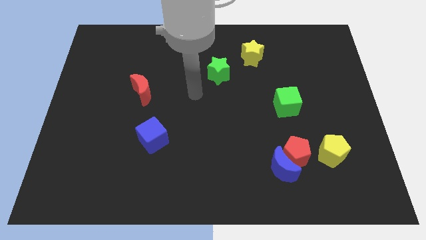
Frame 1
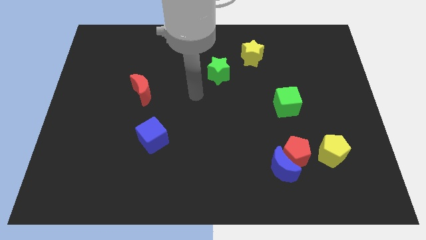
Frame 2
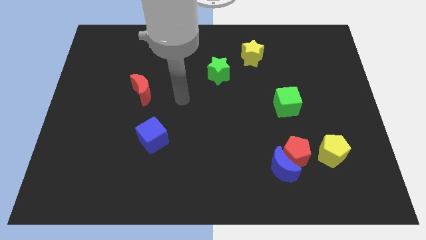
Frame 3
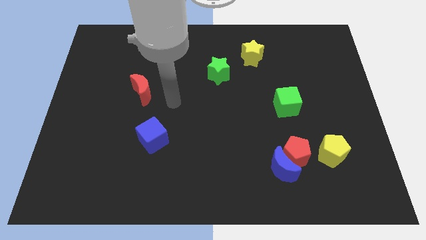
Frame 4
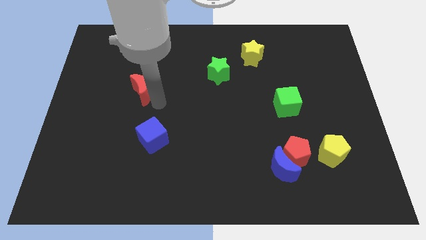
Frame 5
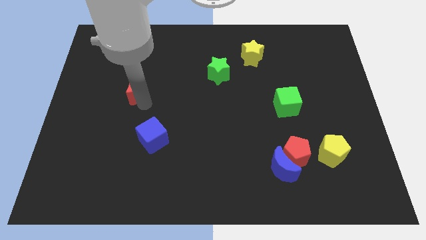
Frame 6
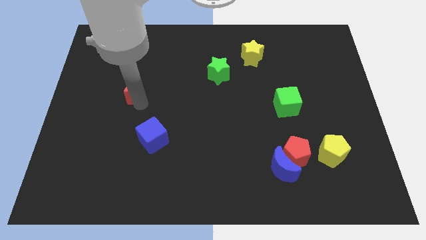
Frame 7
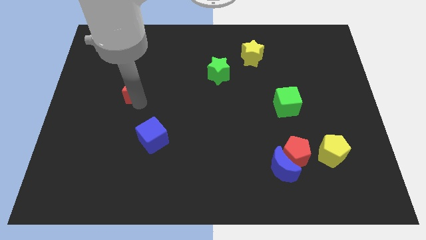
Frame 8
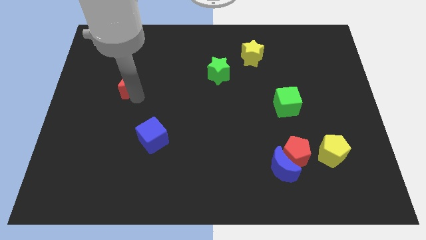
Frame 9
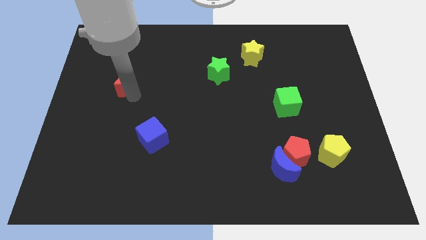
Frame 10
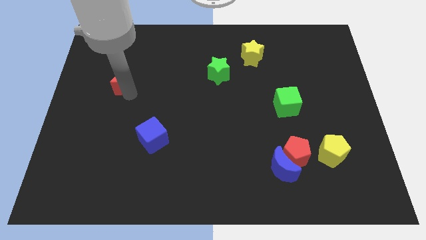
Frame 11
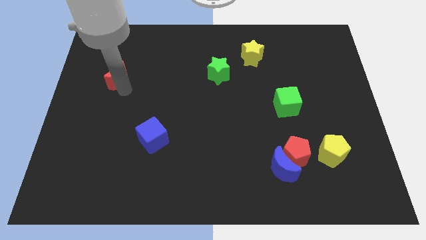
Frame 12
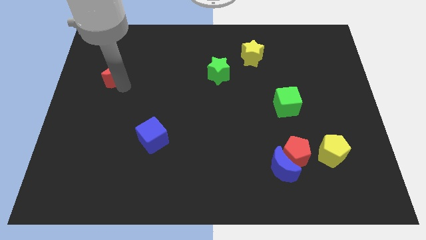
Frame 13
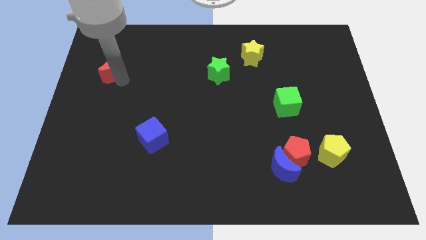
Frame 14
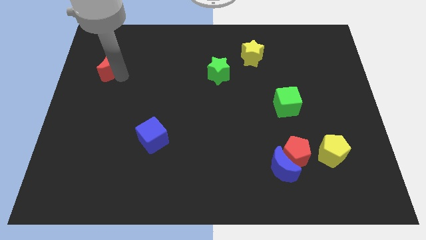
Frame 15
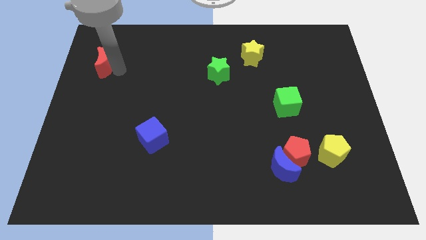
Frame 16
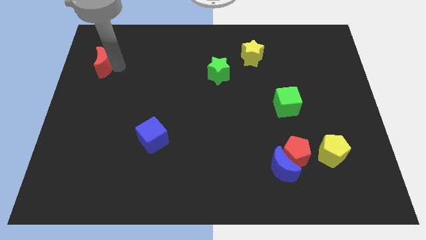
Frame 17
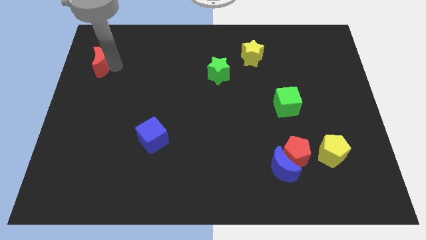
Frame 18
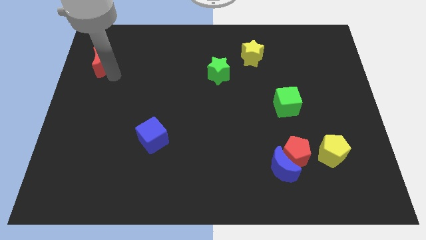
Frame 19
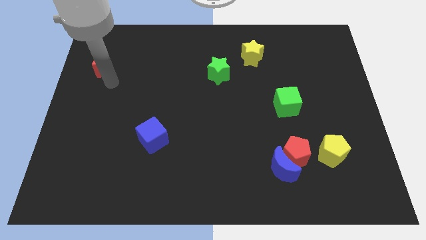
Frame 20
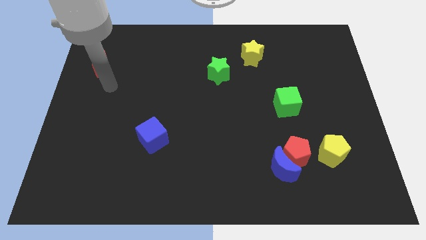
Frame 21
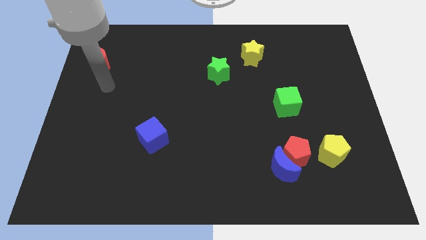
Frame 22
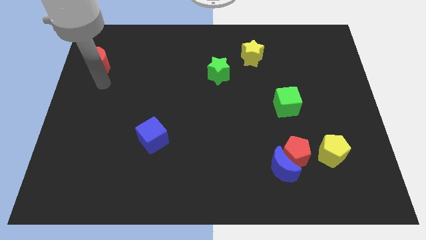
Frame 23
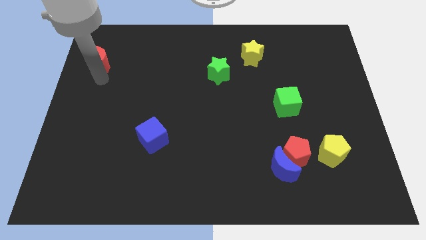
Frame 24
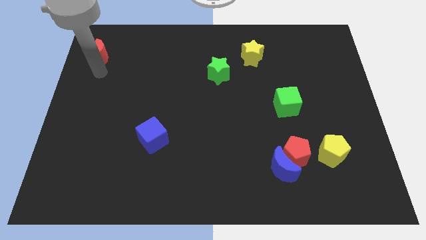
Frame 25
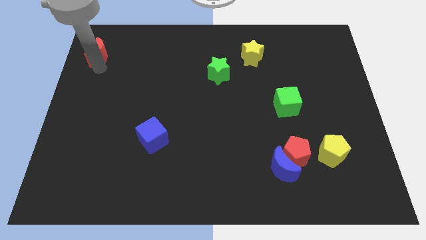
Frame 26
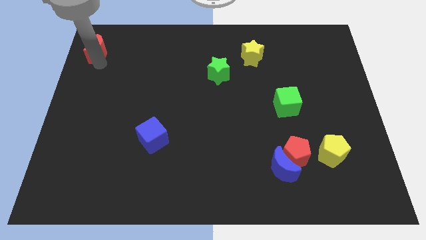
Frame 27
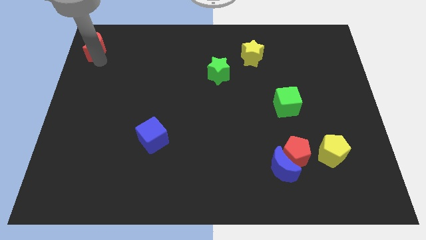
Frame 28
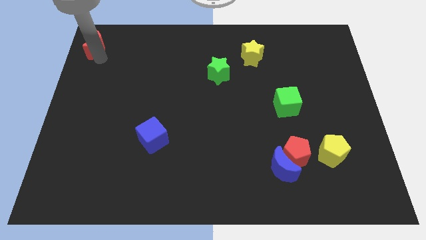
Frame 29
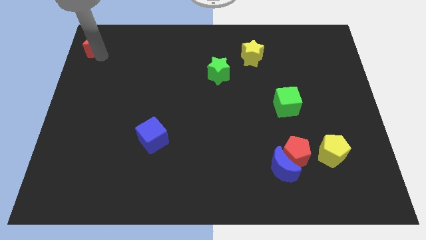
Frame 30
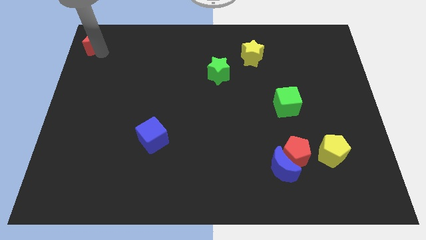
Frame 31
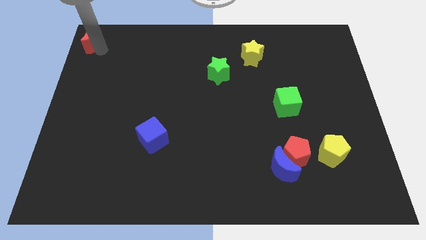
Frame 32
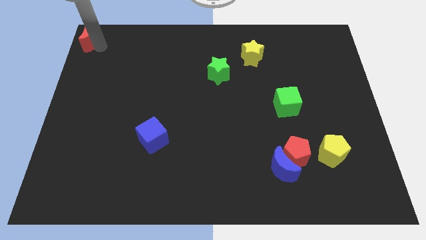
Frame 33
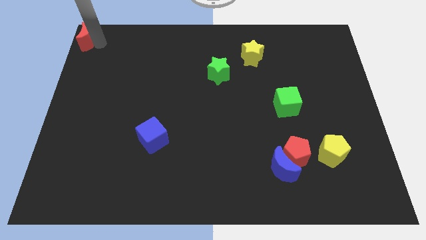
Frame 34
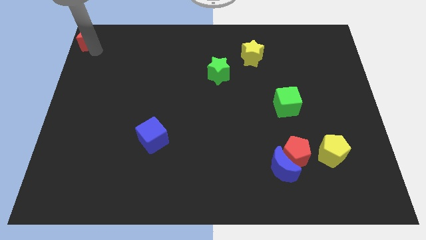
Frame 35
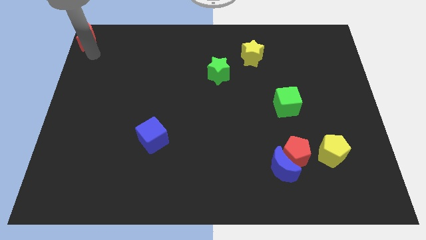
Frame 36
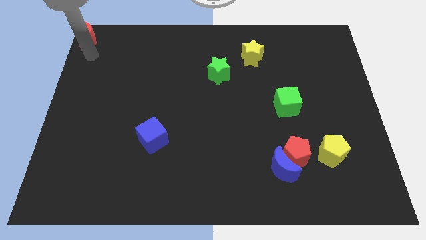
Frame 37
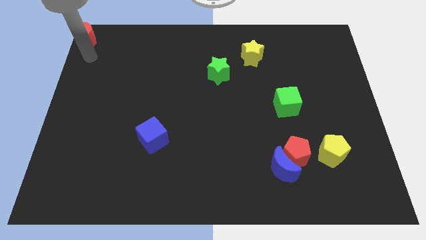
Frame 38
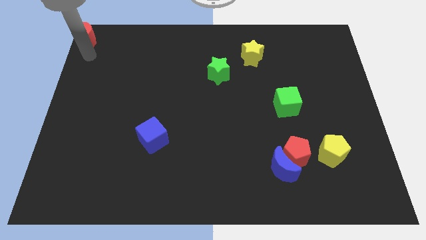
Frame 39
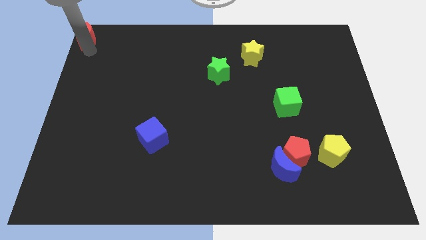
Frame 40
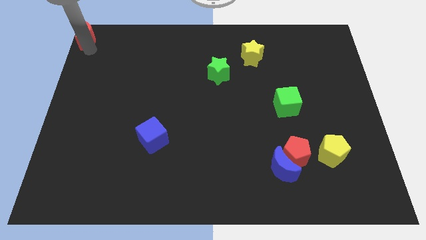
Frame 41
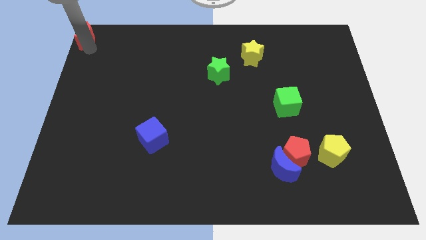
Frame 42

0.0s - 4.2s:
move the red crescent to the top left corner of the board

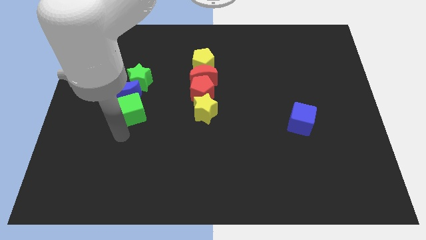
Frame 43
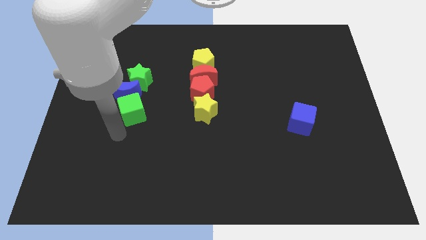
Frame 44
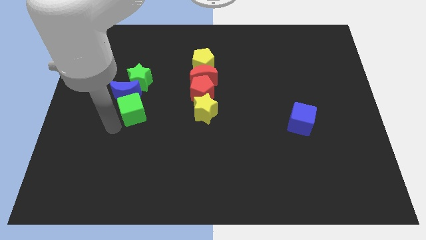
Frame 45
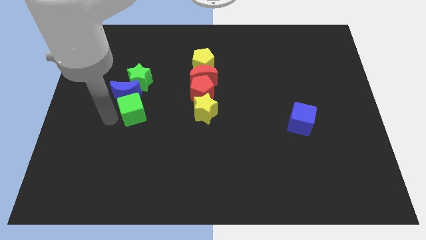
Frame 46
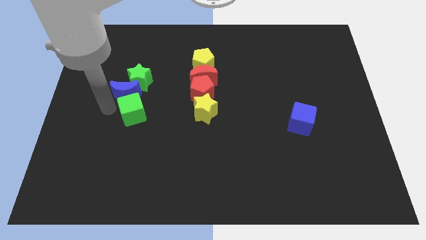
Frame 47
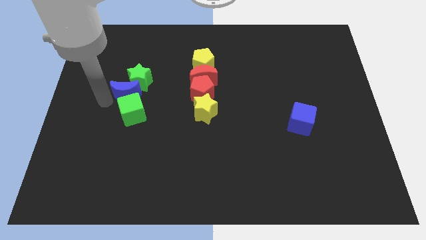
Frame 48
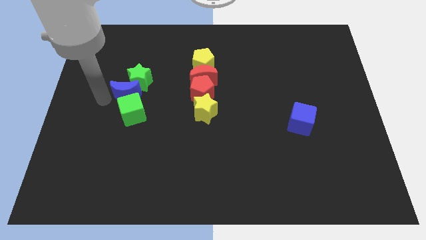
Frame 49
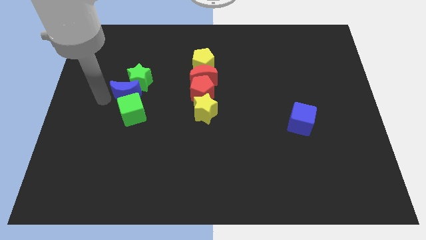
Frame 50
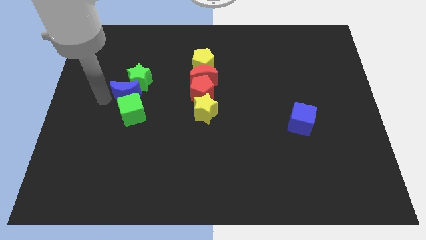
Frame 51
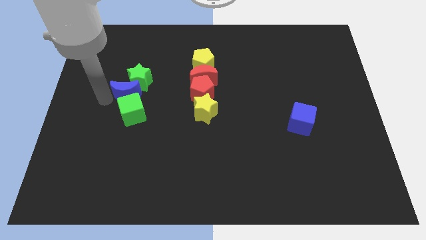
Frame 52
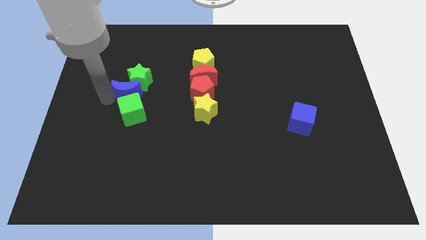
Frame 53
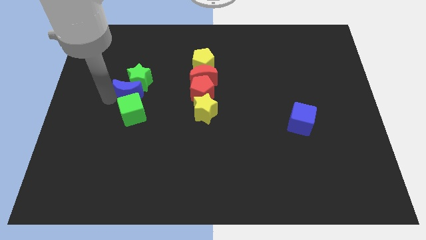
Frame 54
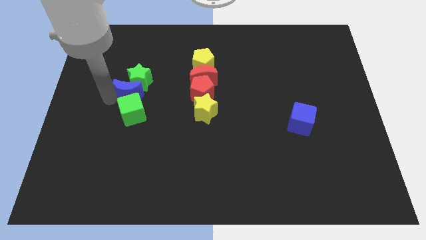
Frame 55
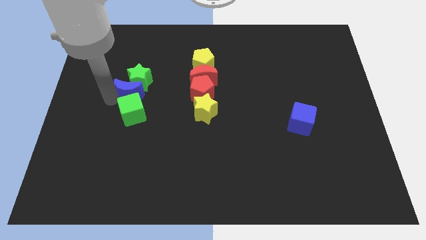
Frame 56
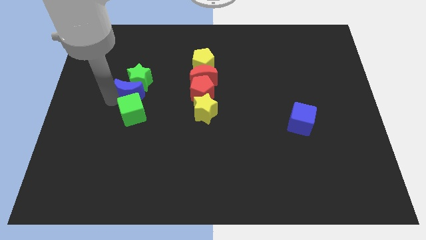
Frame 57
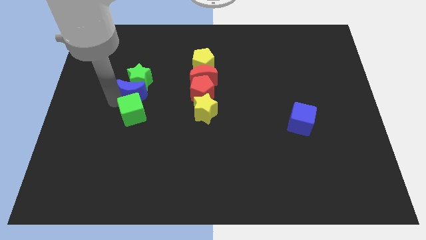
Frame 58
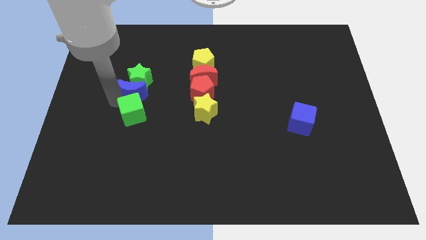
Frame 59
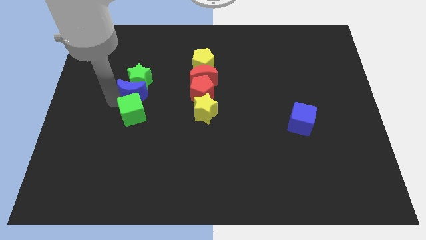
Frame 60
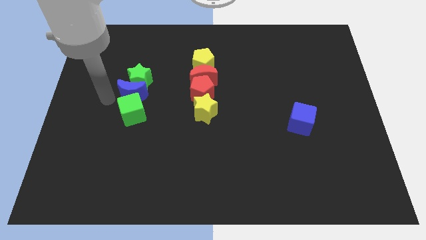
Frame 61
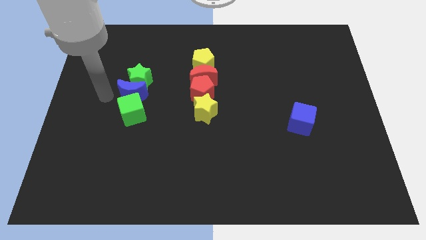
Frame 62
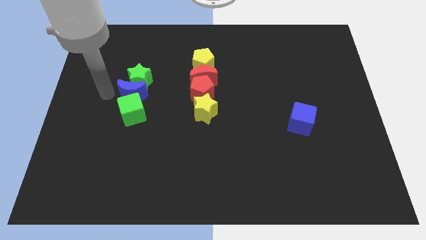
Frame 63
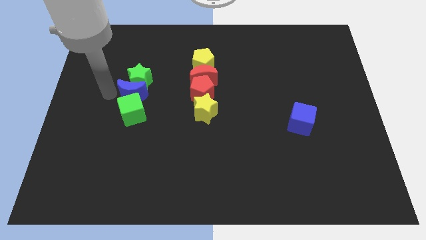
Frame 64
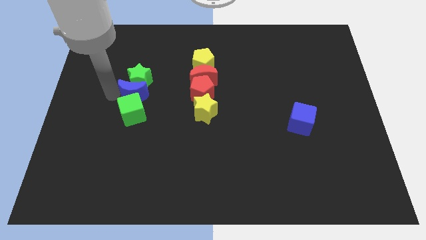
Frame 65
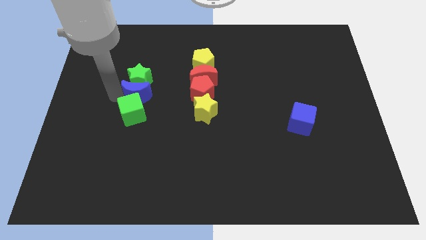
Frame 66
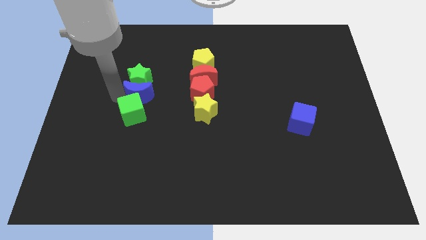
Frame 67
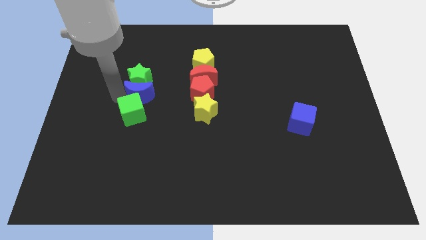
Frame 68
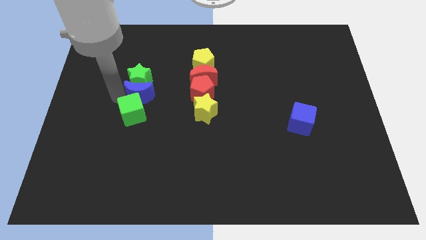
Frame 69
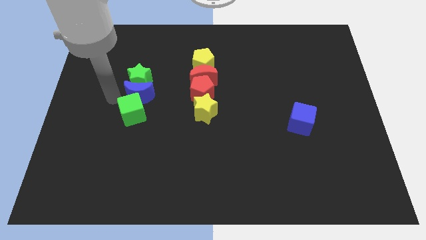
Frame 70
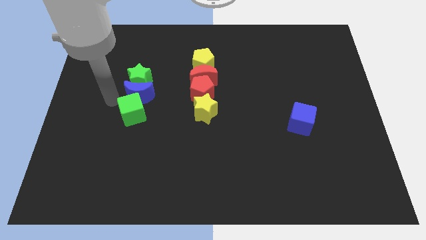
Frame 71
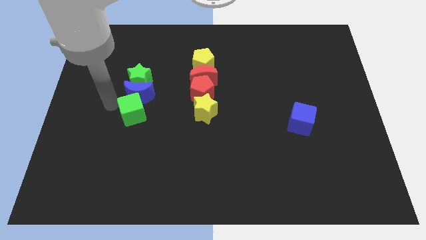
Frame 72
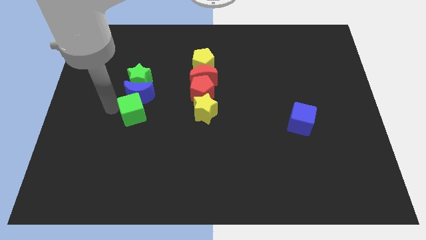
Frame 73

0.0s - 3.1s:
place blue moon in between green blocks

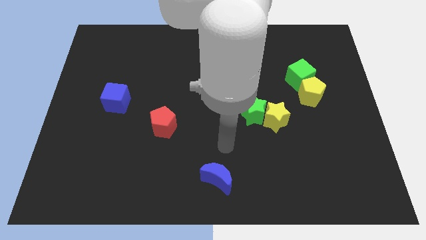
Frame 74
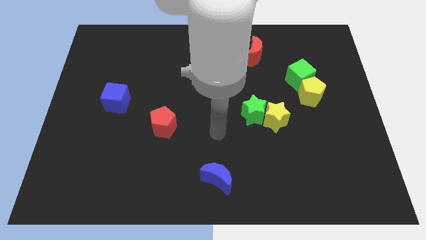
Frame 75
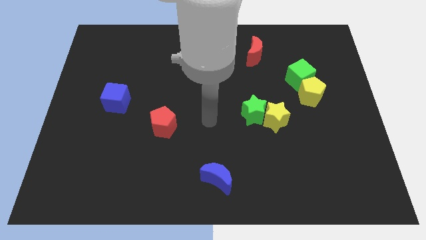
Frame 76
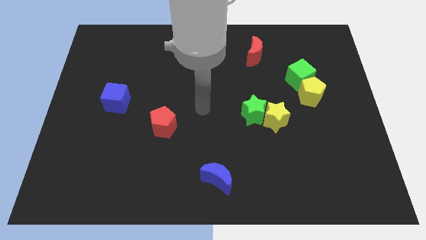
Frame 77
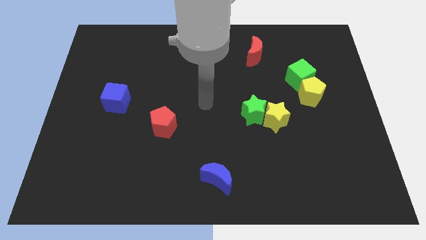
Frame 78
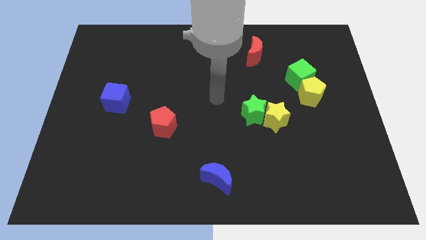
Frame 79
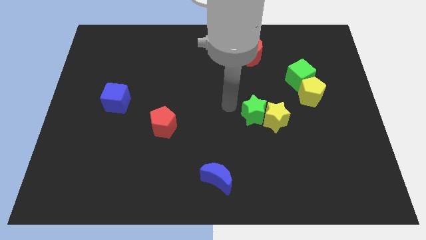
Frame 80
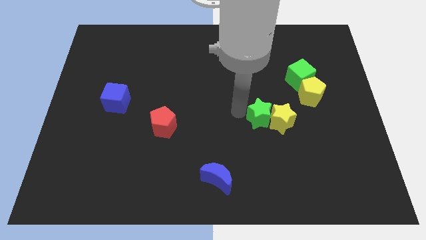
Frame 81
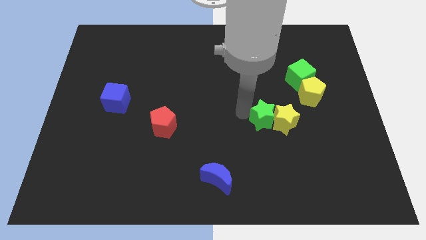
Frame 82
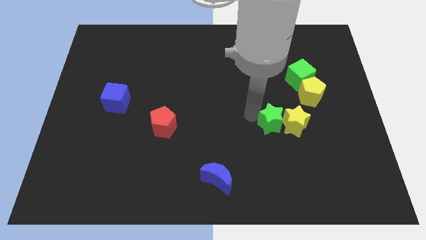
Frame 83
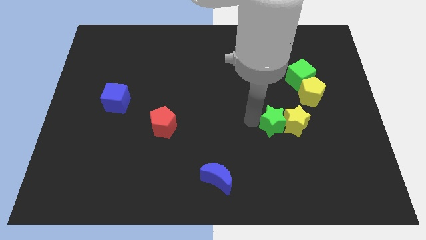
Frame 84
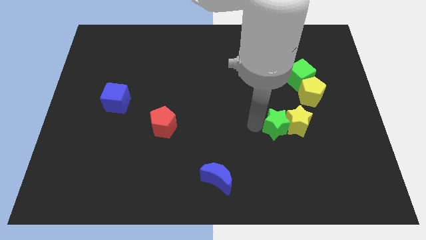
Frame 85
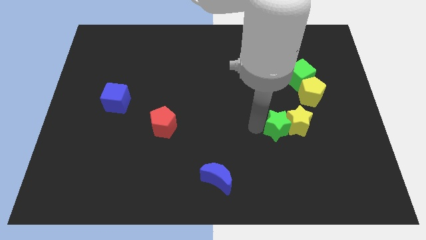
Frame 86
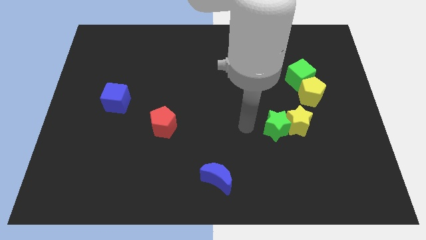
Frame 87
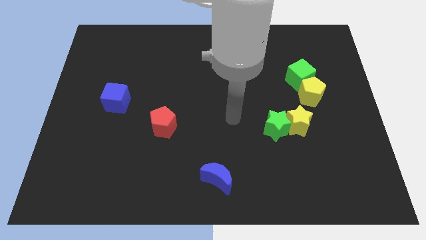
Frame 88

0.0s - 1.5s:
push the green and yellow stars together slightly to the right

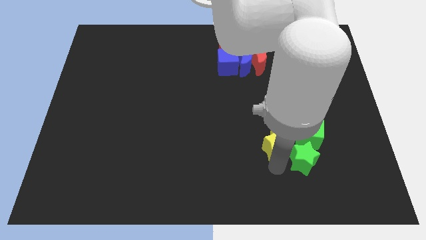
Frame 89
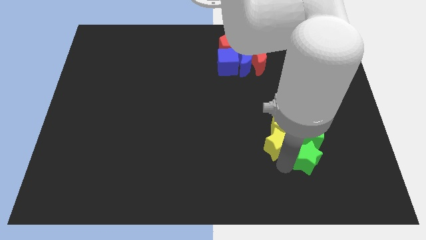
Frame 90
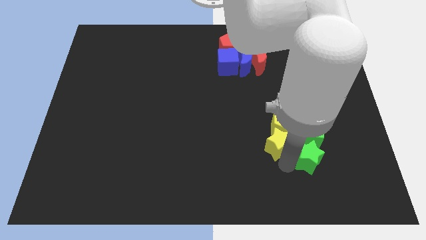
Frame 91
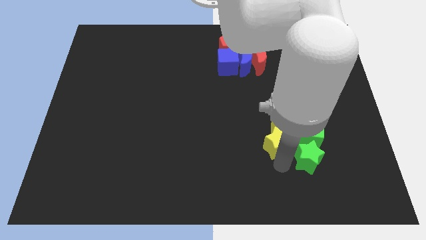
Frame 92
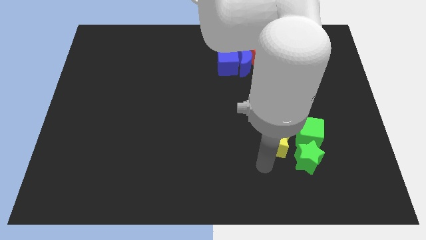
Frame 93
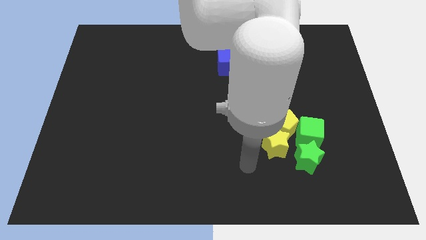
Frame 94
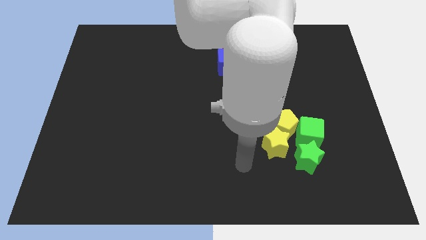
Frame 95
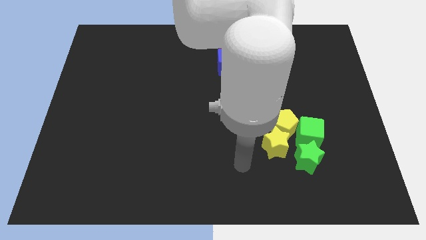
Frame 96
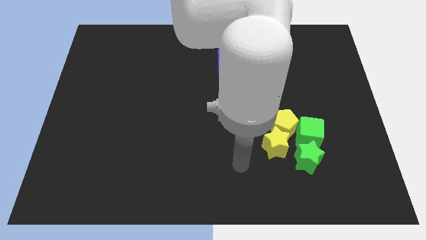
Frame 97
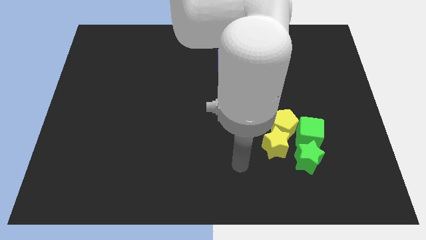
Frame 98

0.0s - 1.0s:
touch the green star
